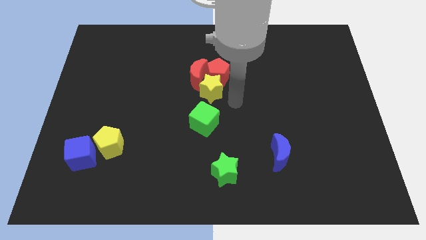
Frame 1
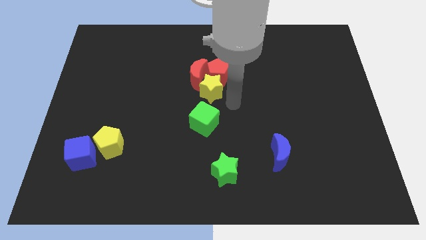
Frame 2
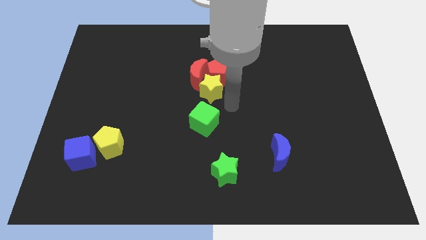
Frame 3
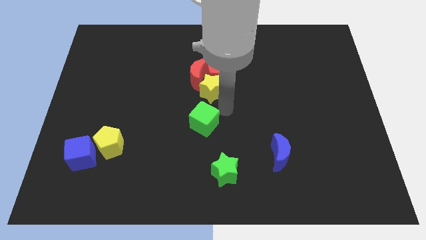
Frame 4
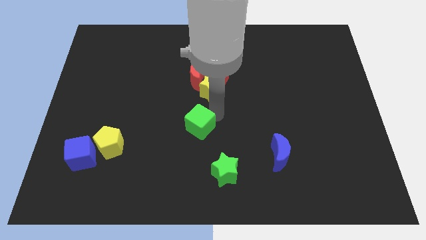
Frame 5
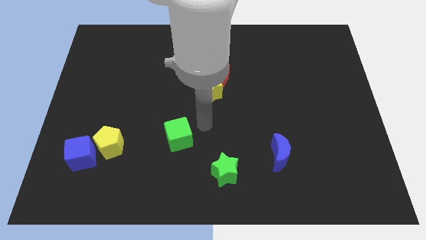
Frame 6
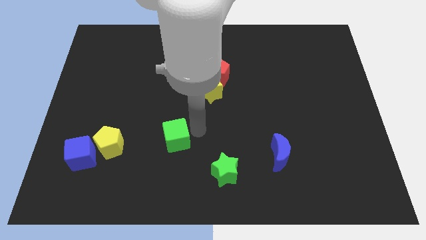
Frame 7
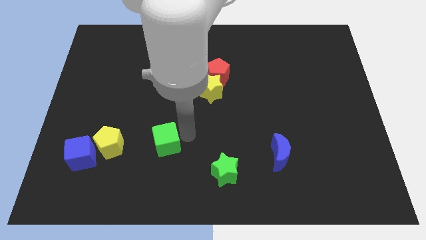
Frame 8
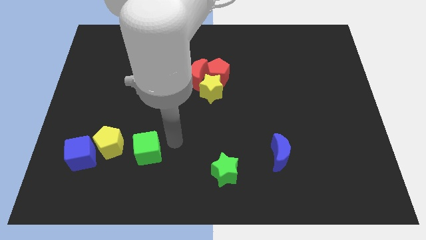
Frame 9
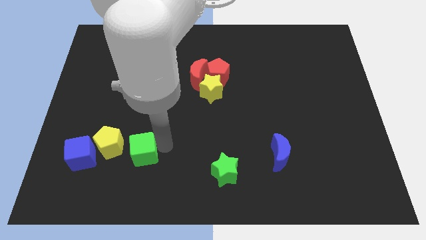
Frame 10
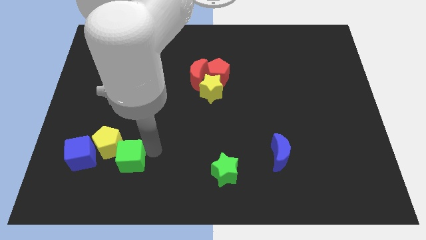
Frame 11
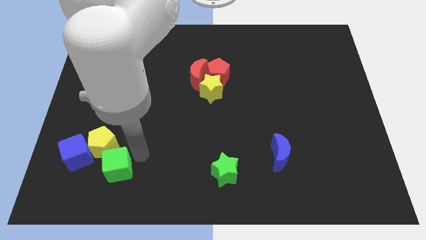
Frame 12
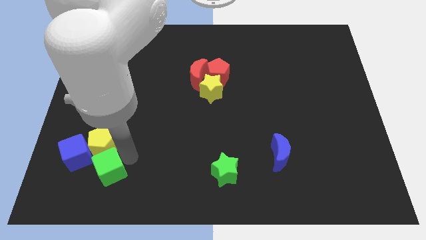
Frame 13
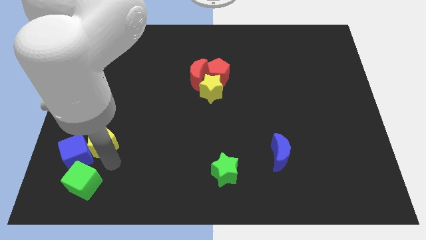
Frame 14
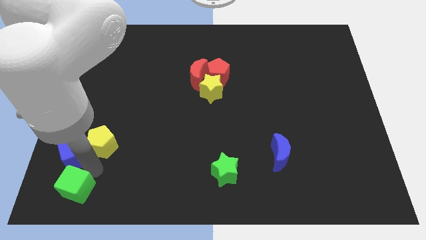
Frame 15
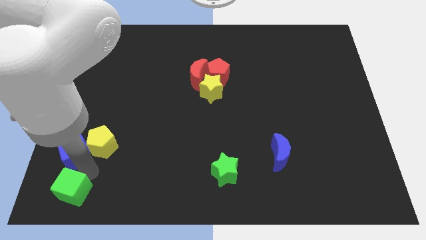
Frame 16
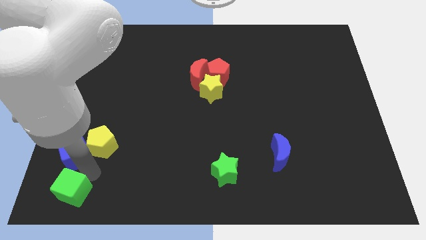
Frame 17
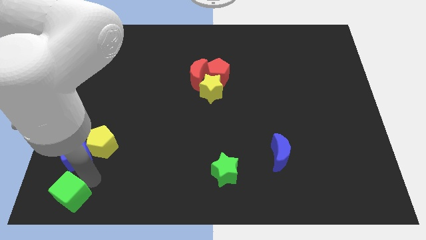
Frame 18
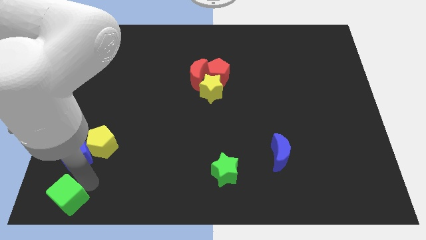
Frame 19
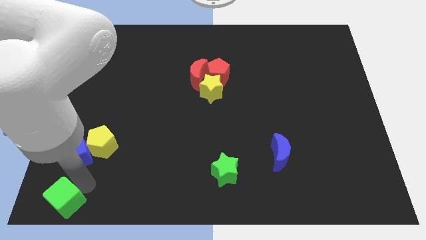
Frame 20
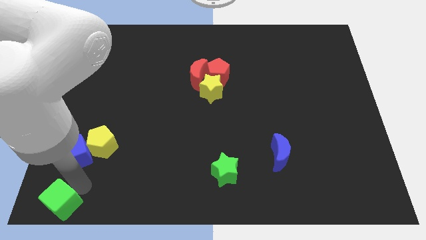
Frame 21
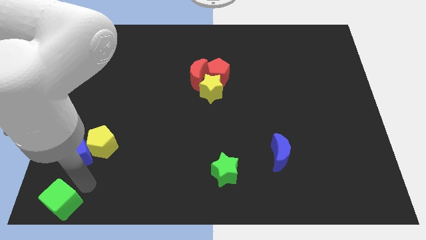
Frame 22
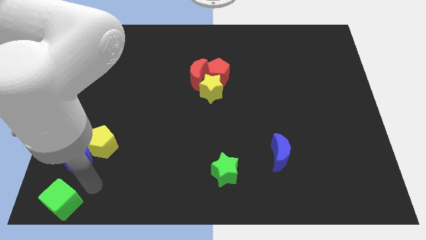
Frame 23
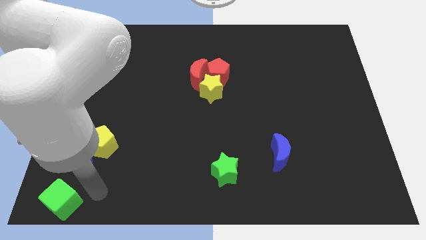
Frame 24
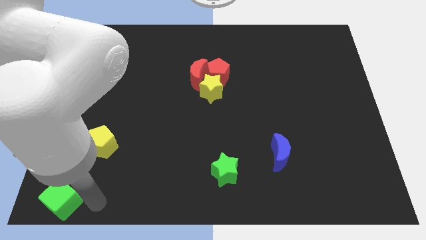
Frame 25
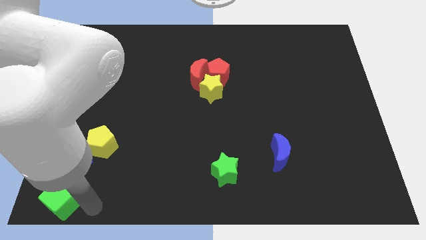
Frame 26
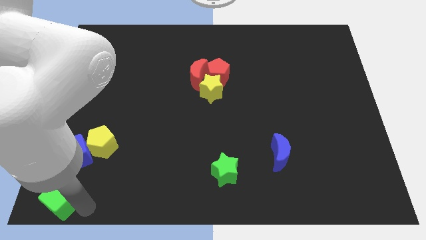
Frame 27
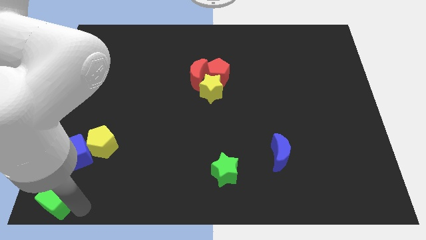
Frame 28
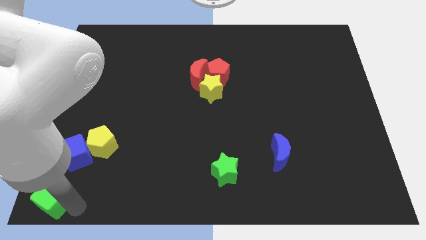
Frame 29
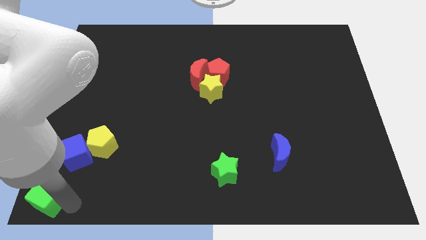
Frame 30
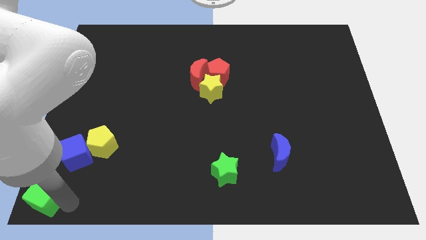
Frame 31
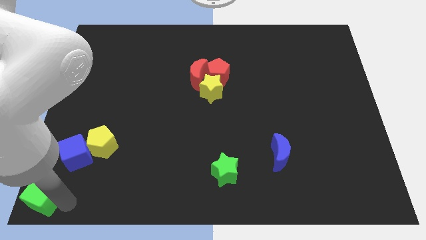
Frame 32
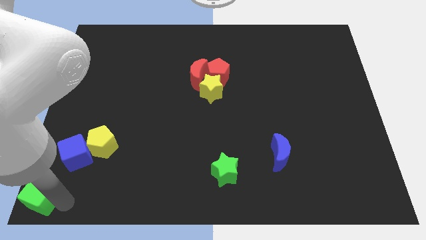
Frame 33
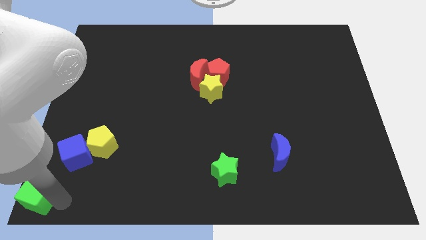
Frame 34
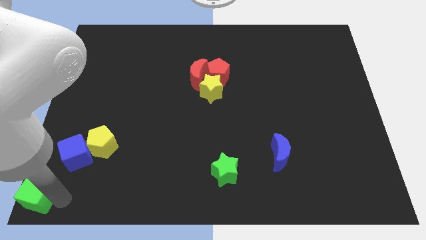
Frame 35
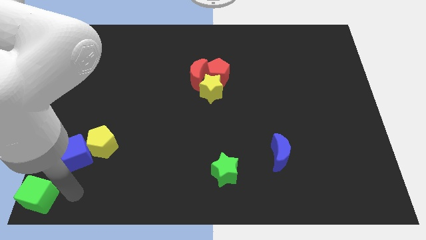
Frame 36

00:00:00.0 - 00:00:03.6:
push the green cube to the bottom left corner of the board

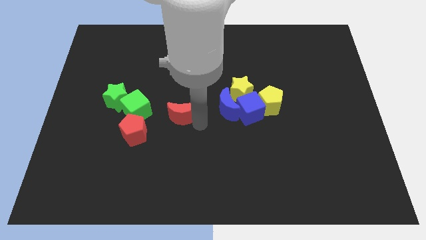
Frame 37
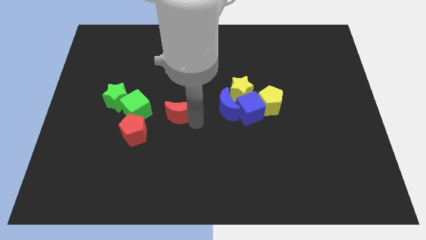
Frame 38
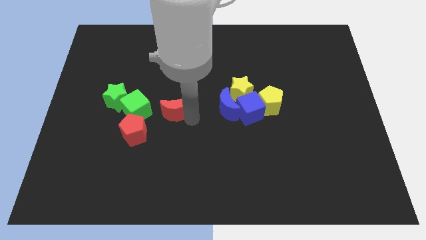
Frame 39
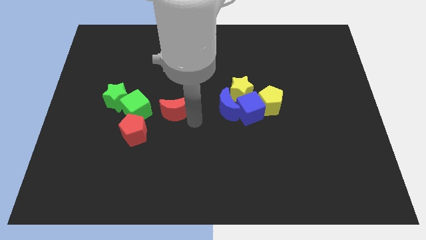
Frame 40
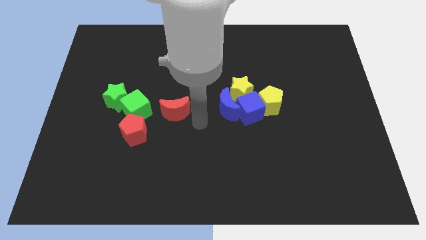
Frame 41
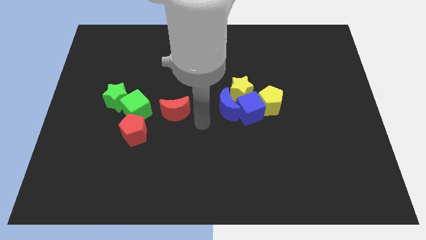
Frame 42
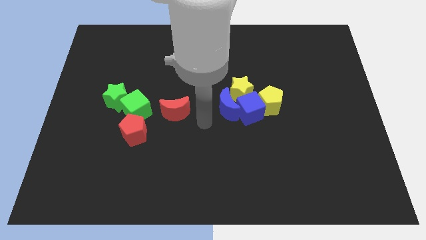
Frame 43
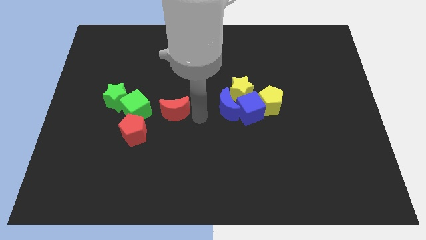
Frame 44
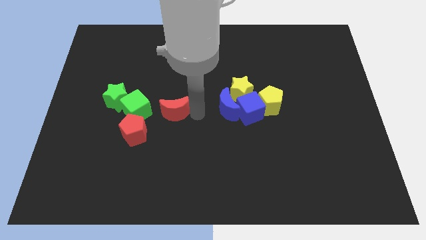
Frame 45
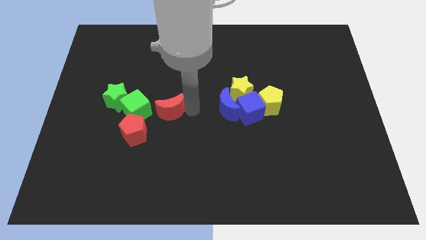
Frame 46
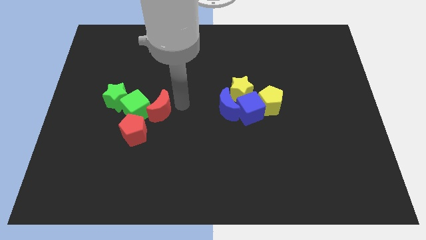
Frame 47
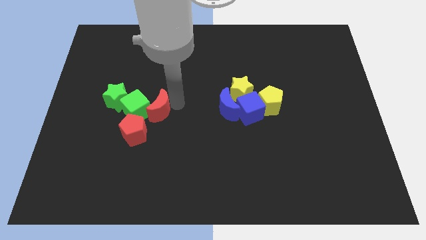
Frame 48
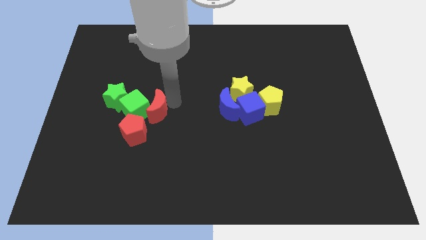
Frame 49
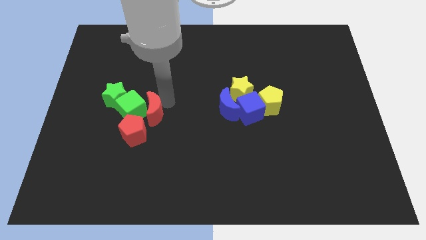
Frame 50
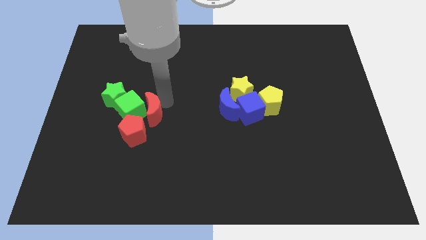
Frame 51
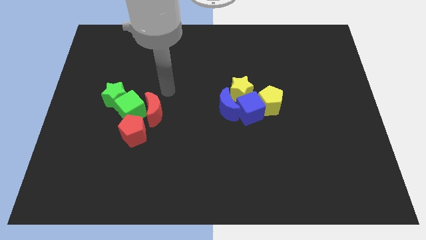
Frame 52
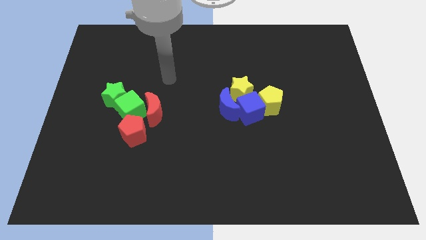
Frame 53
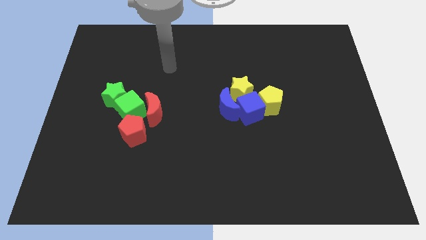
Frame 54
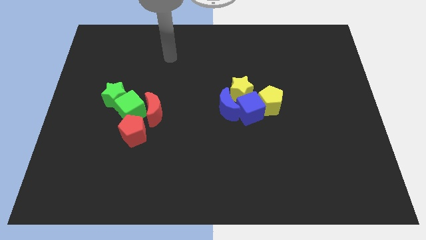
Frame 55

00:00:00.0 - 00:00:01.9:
move the red moon to the bottom of the green cube

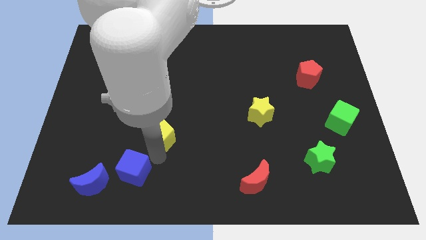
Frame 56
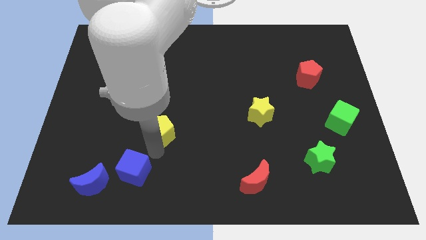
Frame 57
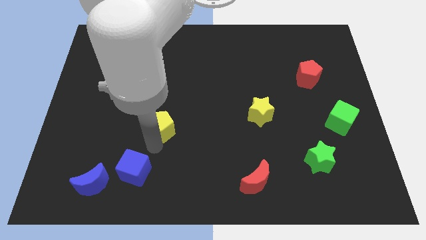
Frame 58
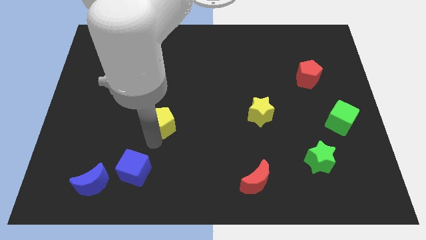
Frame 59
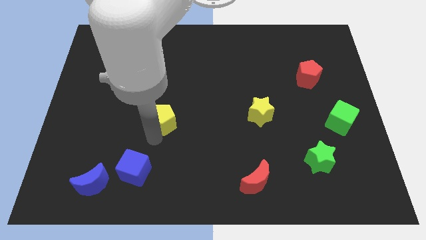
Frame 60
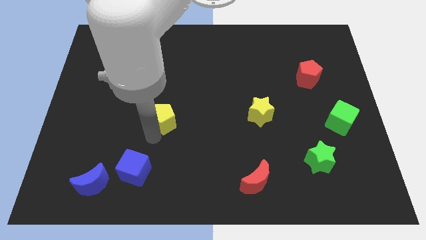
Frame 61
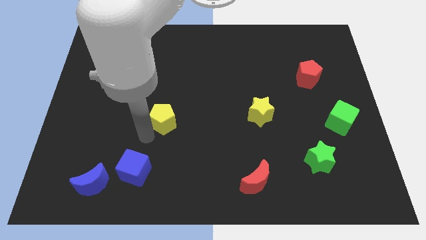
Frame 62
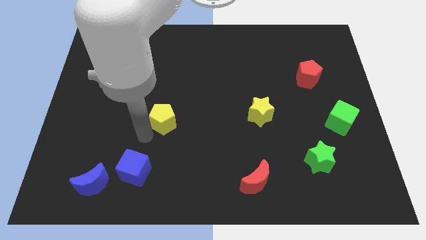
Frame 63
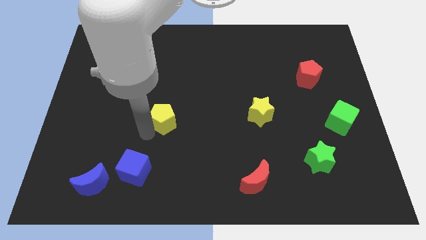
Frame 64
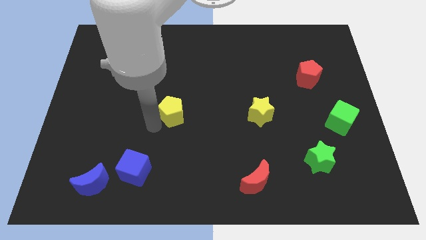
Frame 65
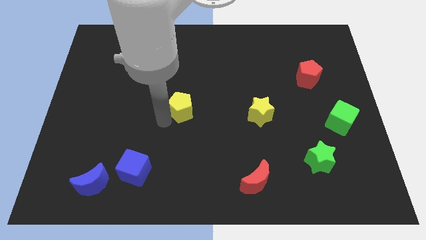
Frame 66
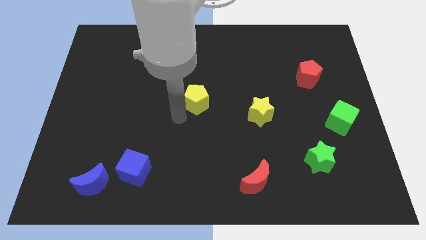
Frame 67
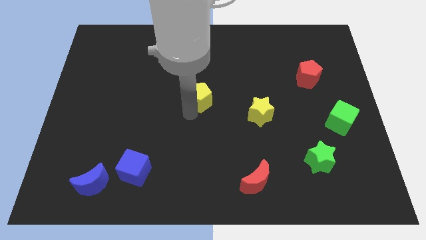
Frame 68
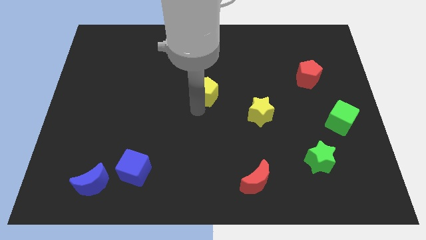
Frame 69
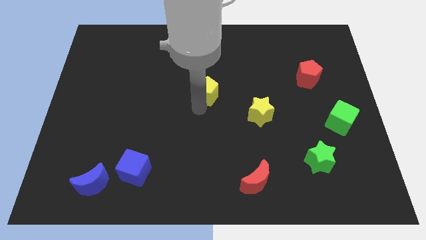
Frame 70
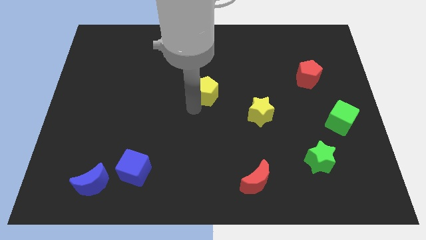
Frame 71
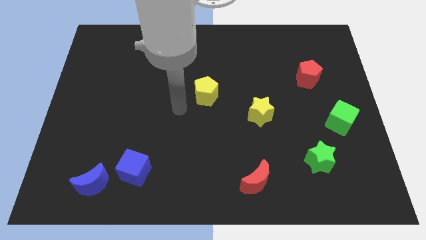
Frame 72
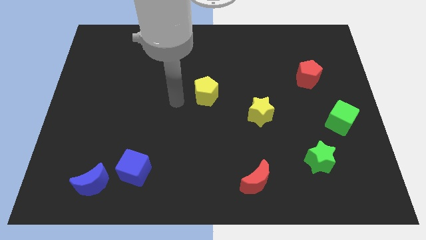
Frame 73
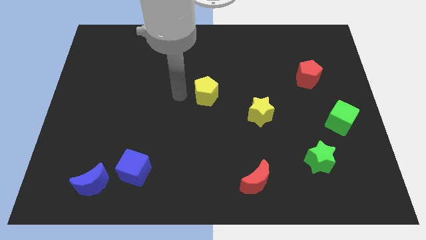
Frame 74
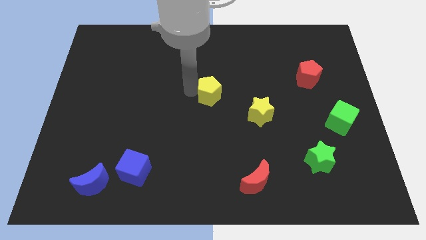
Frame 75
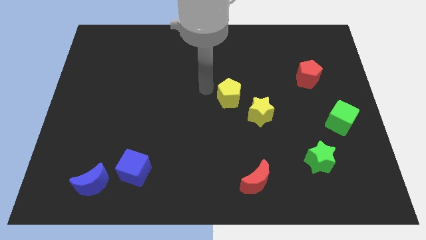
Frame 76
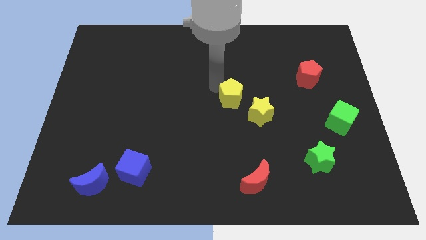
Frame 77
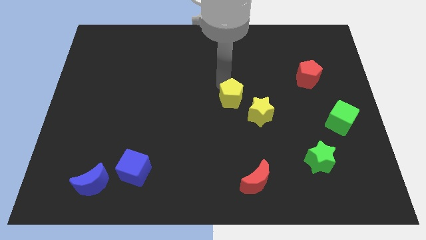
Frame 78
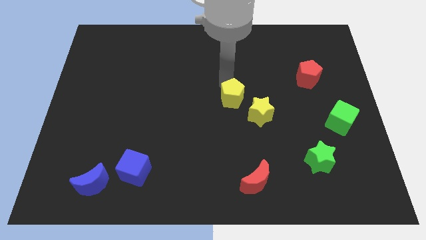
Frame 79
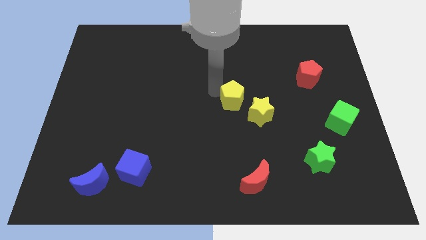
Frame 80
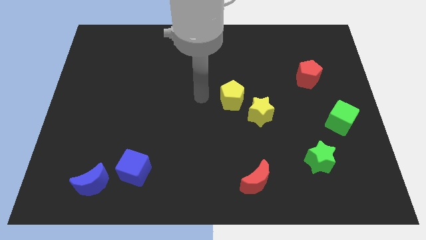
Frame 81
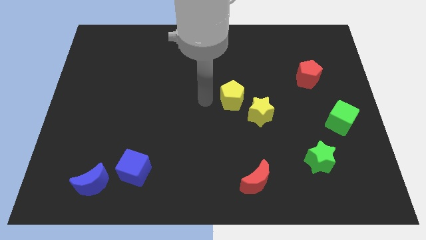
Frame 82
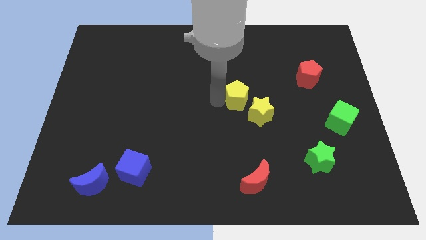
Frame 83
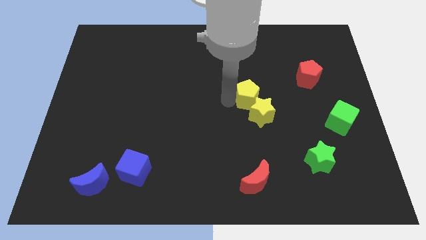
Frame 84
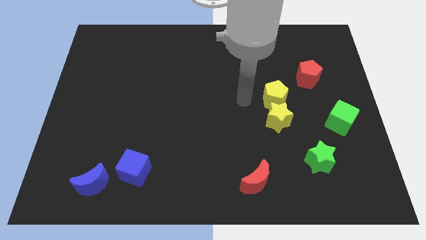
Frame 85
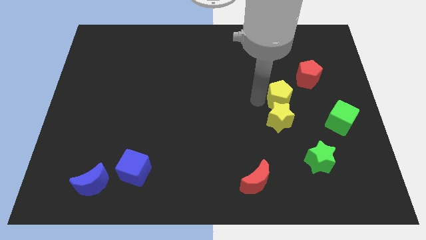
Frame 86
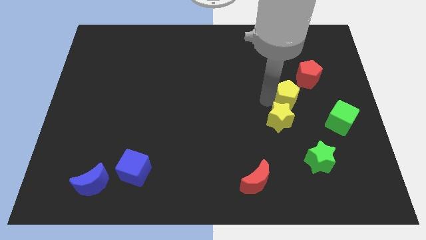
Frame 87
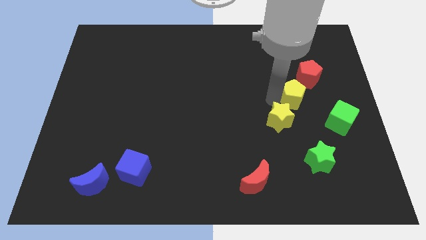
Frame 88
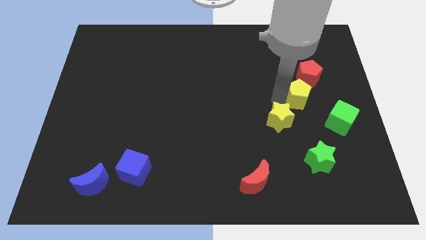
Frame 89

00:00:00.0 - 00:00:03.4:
move yellow pentagon to the top right of the yellow star

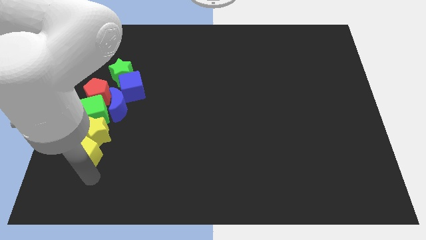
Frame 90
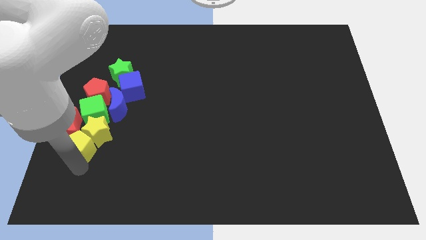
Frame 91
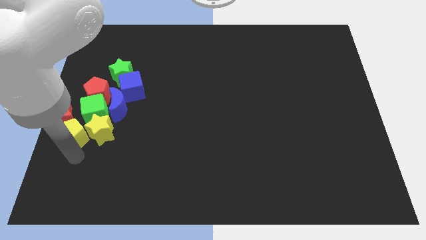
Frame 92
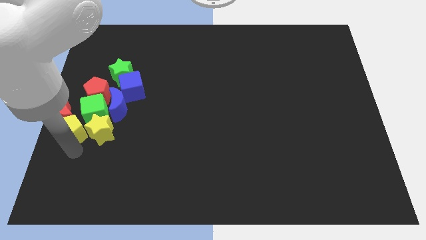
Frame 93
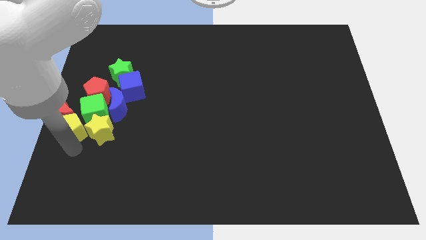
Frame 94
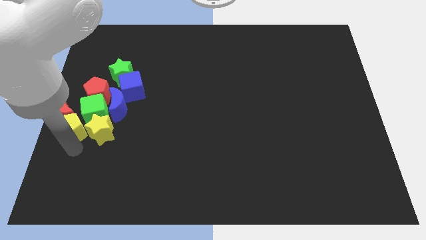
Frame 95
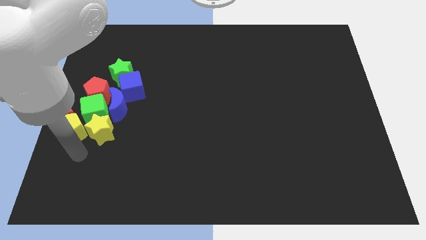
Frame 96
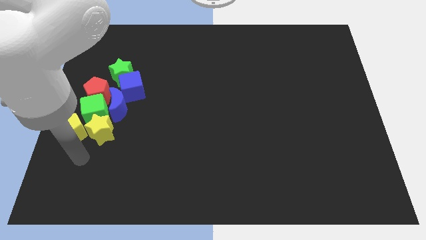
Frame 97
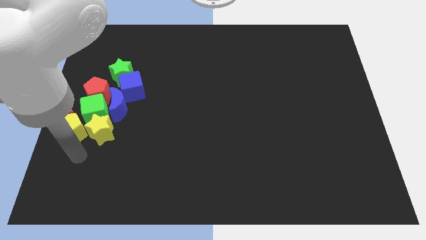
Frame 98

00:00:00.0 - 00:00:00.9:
move yellow pentagon into red crescent
